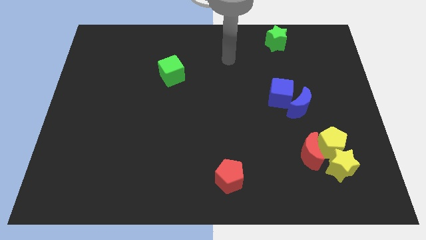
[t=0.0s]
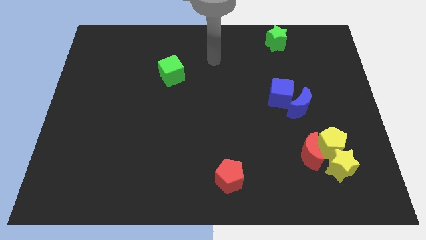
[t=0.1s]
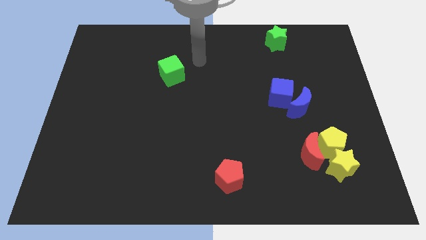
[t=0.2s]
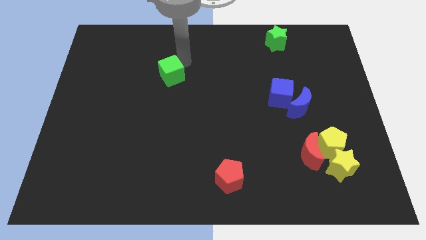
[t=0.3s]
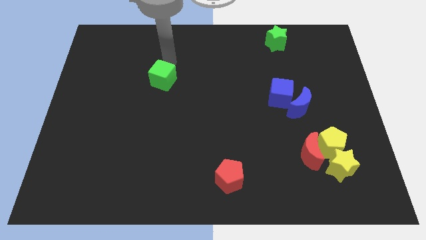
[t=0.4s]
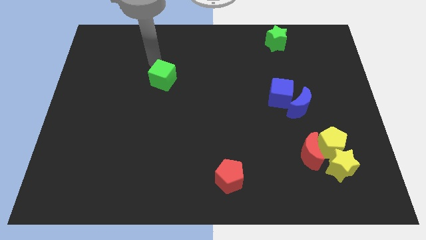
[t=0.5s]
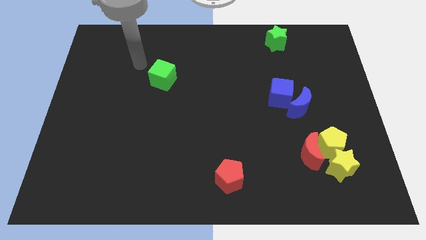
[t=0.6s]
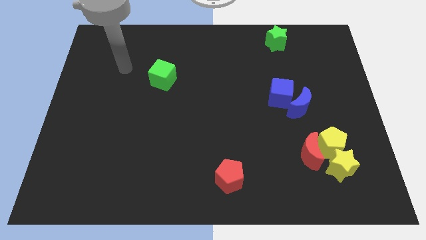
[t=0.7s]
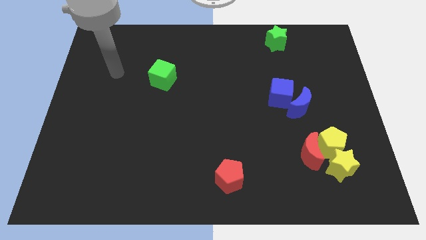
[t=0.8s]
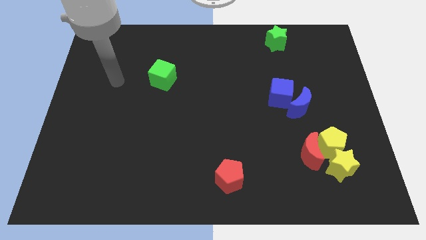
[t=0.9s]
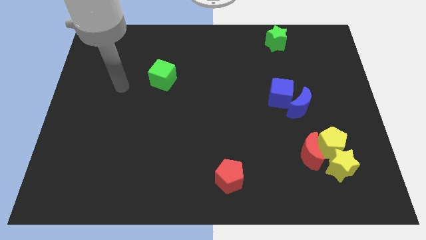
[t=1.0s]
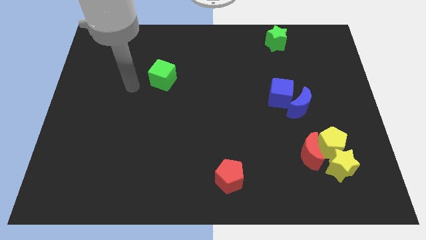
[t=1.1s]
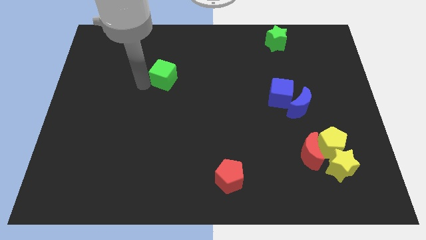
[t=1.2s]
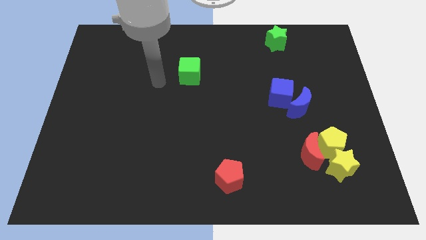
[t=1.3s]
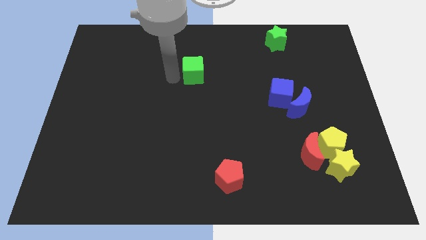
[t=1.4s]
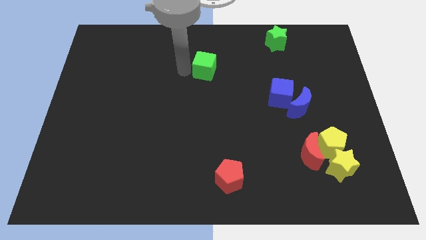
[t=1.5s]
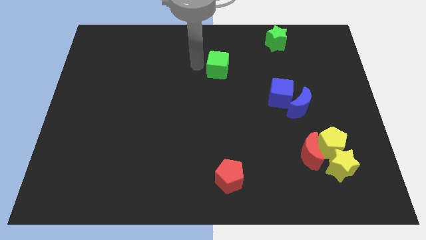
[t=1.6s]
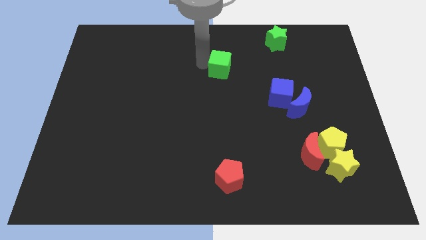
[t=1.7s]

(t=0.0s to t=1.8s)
push the green cube slightly to the right

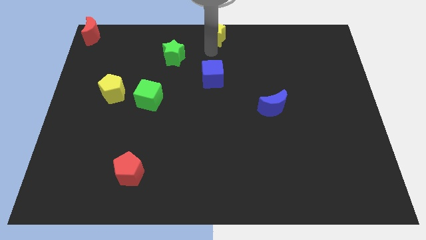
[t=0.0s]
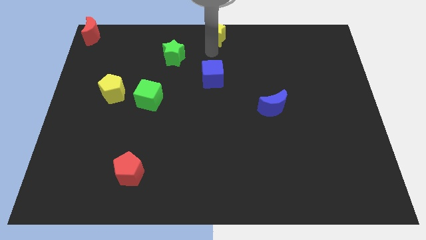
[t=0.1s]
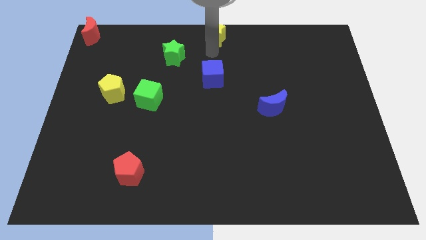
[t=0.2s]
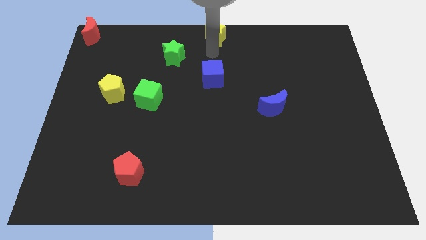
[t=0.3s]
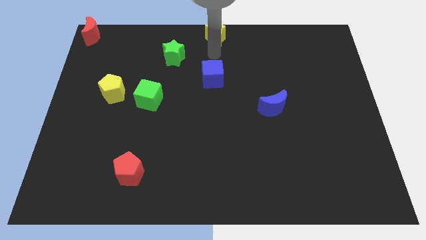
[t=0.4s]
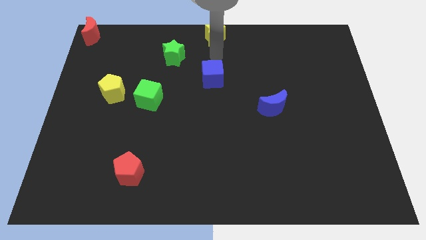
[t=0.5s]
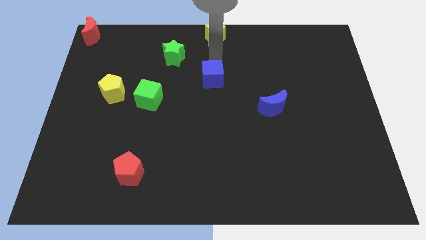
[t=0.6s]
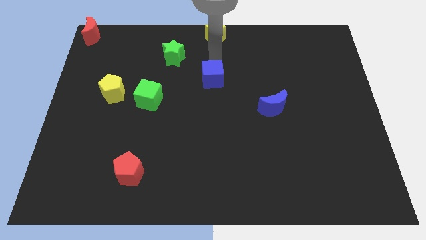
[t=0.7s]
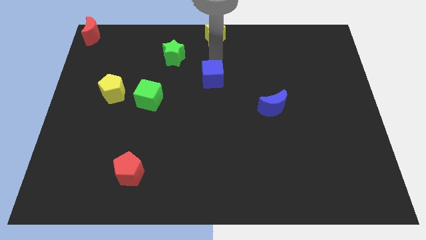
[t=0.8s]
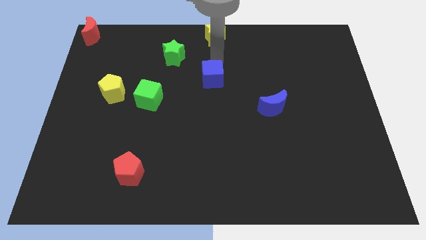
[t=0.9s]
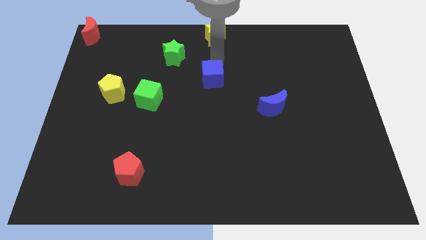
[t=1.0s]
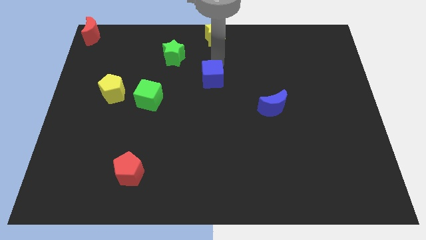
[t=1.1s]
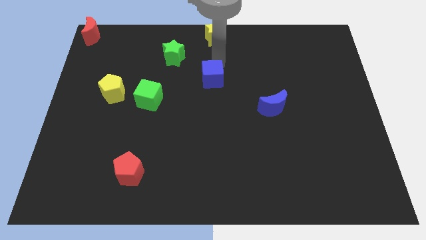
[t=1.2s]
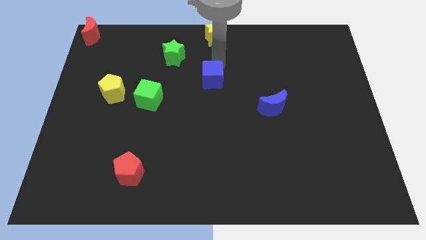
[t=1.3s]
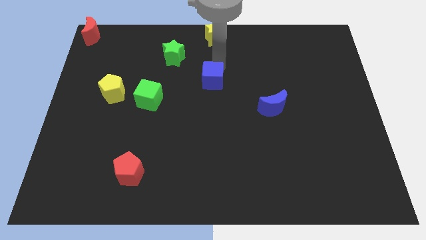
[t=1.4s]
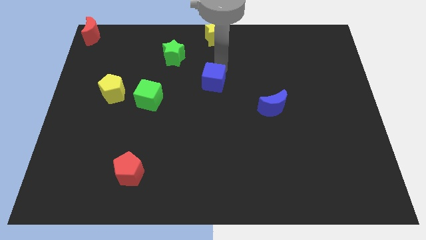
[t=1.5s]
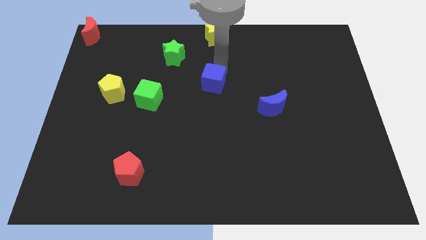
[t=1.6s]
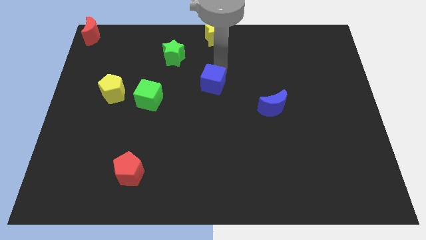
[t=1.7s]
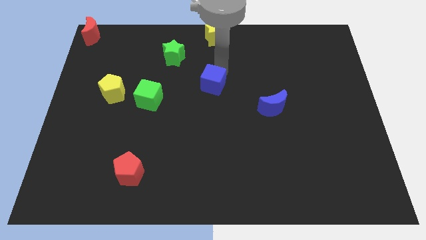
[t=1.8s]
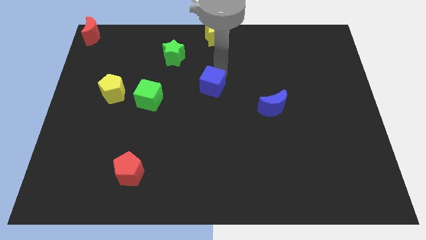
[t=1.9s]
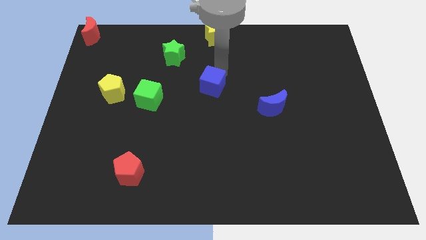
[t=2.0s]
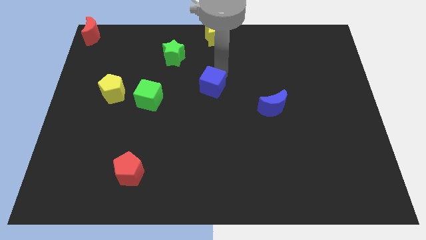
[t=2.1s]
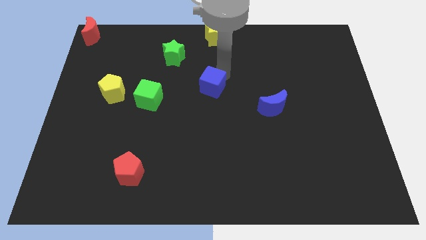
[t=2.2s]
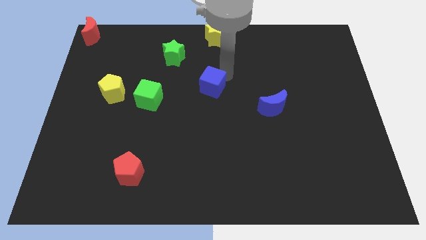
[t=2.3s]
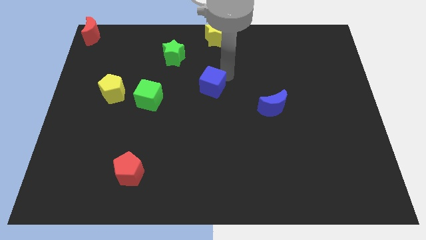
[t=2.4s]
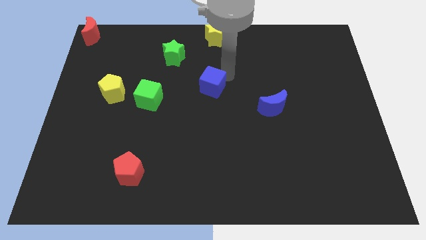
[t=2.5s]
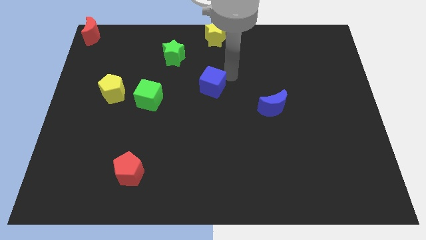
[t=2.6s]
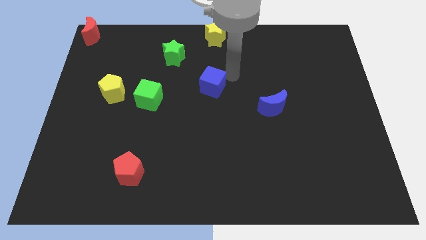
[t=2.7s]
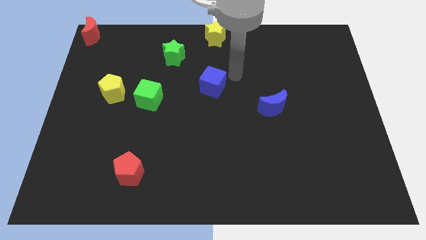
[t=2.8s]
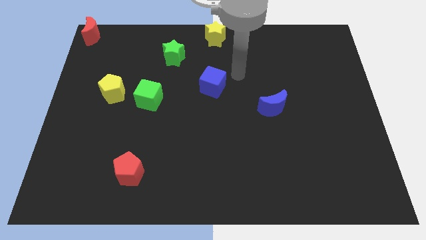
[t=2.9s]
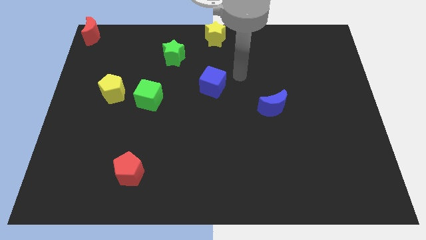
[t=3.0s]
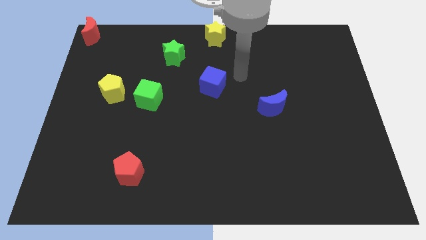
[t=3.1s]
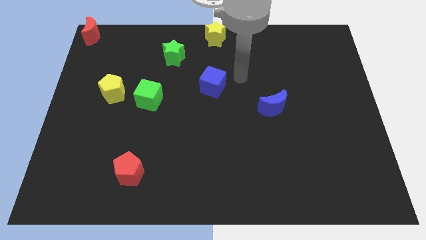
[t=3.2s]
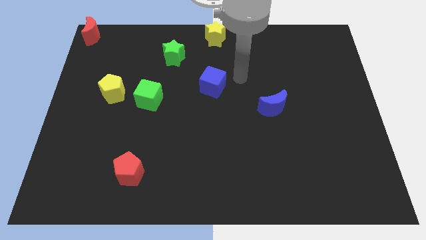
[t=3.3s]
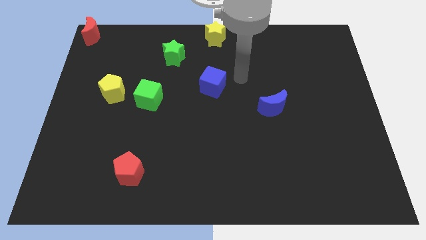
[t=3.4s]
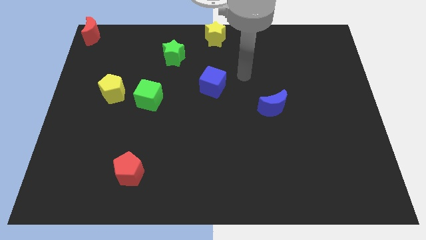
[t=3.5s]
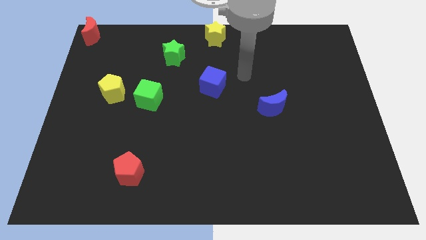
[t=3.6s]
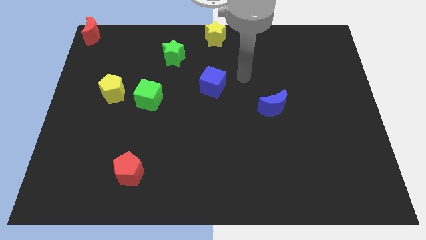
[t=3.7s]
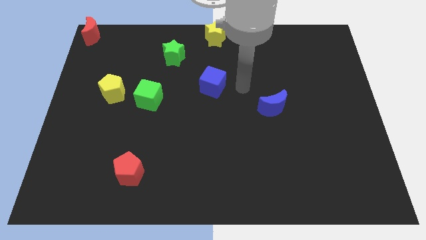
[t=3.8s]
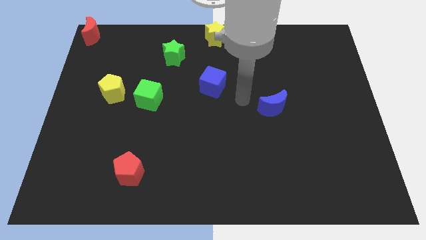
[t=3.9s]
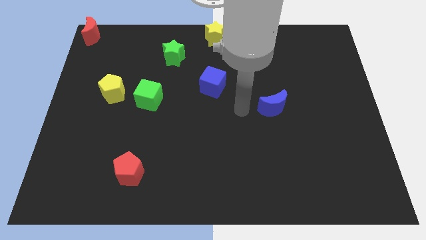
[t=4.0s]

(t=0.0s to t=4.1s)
slightly move the blue cube to the bottom of the board

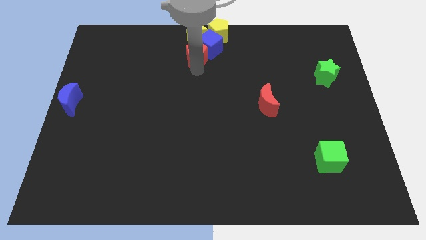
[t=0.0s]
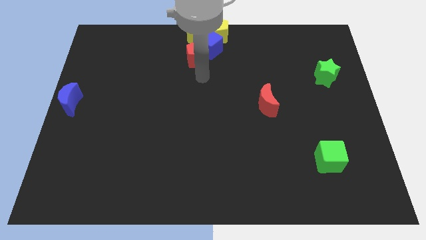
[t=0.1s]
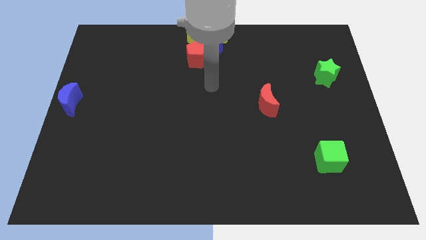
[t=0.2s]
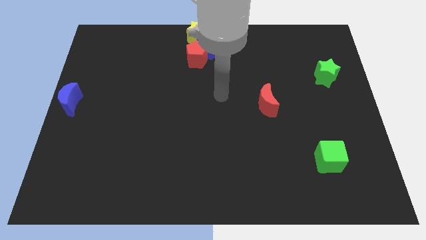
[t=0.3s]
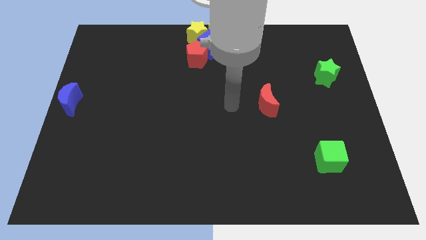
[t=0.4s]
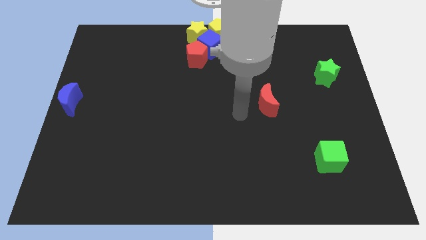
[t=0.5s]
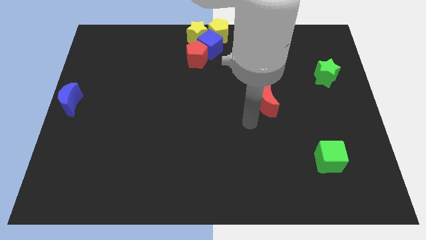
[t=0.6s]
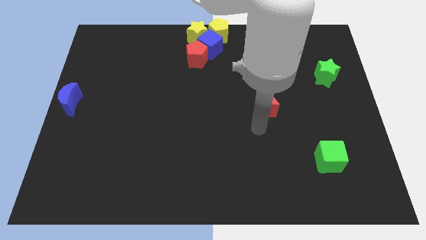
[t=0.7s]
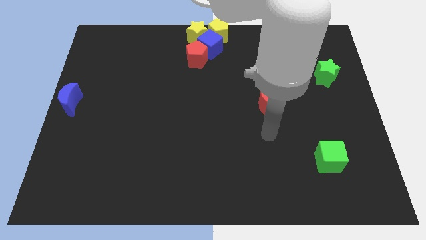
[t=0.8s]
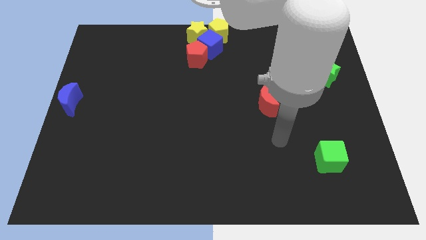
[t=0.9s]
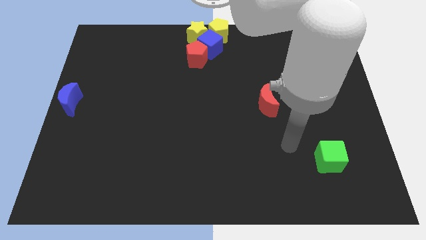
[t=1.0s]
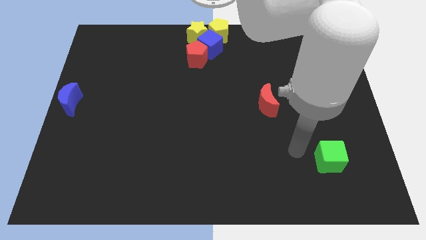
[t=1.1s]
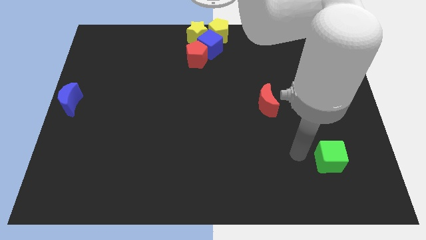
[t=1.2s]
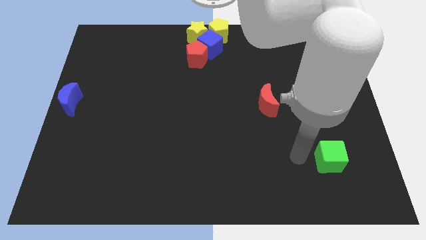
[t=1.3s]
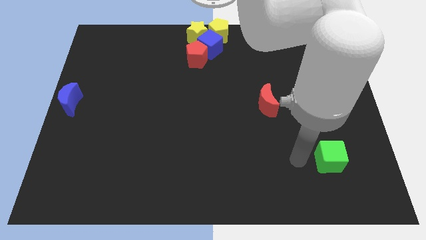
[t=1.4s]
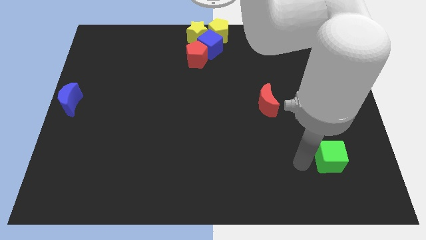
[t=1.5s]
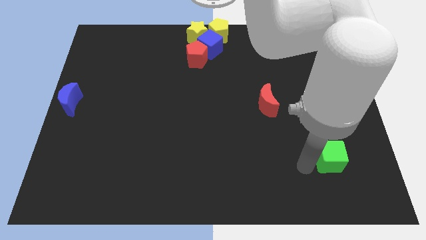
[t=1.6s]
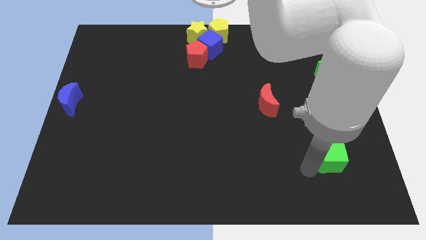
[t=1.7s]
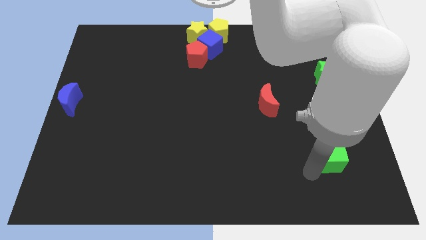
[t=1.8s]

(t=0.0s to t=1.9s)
place the arm under a green cube

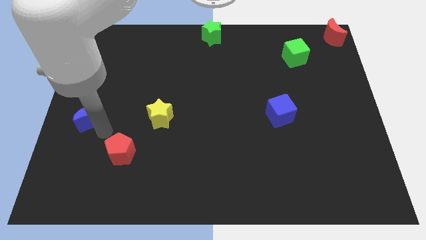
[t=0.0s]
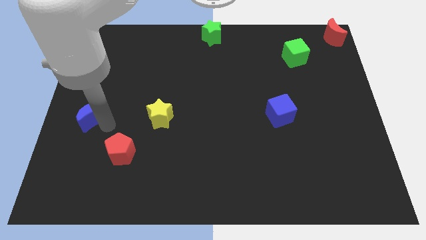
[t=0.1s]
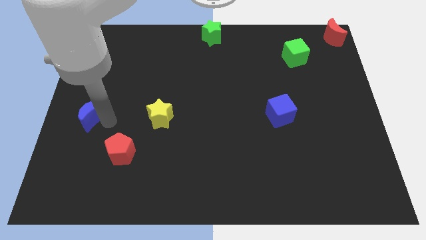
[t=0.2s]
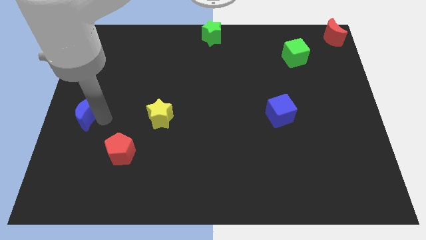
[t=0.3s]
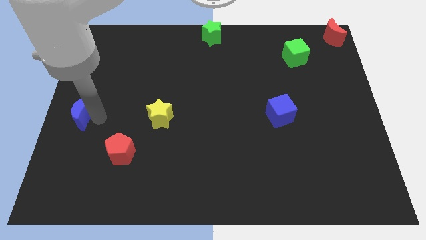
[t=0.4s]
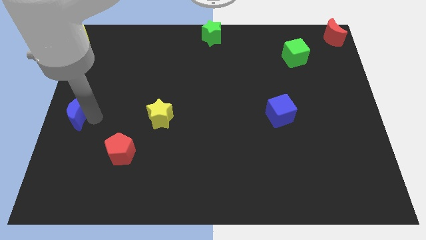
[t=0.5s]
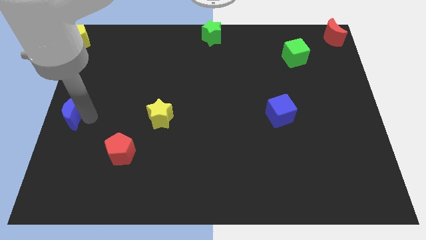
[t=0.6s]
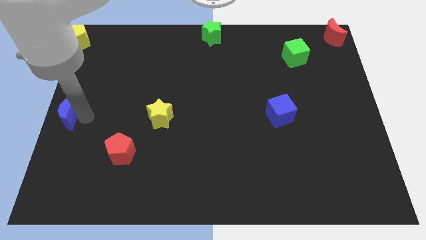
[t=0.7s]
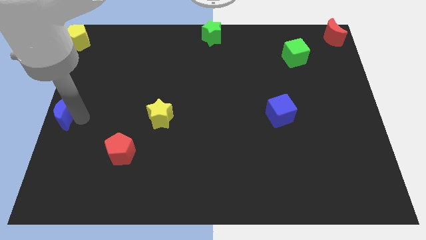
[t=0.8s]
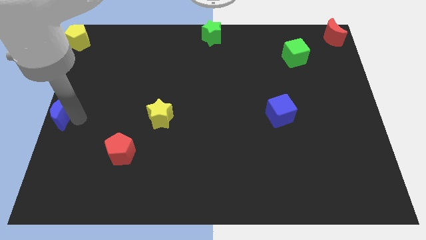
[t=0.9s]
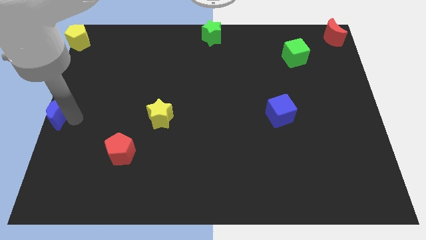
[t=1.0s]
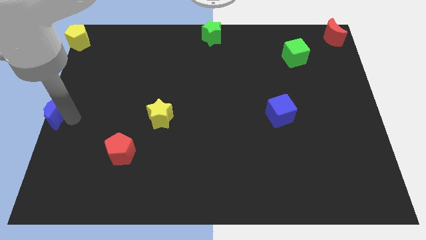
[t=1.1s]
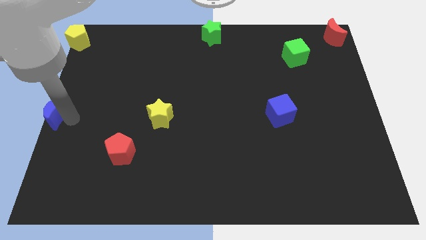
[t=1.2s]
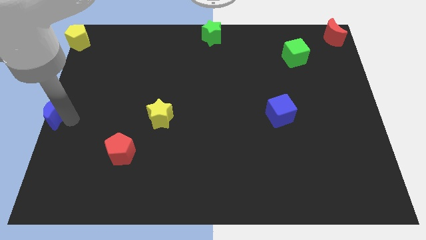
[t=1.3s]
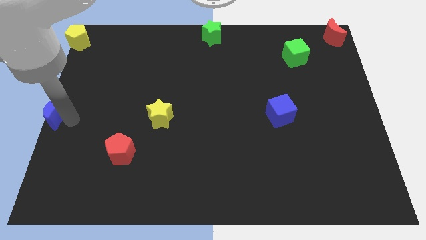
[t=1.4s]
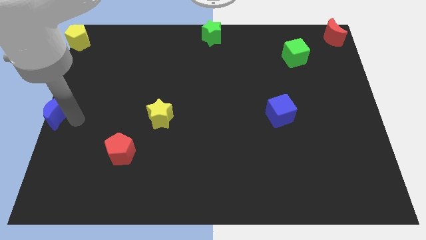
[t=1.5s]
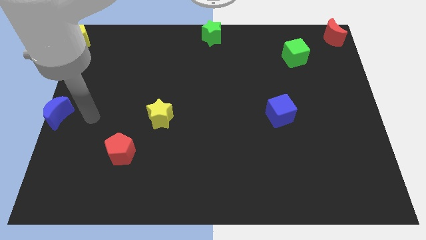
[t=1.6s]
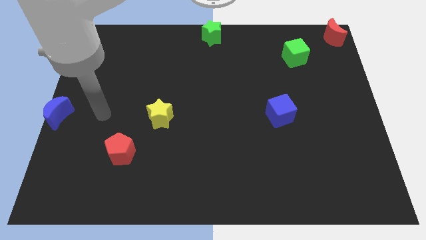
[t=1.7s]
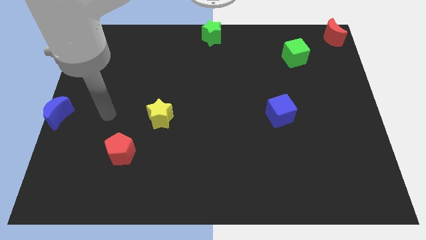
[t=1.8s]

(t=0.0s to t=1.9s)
push blue crescent and red pentagon apart
